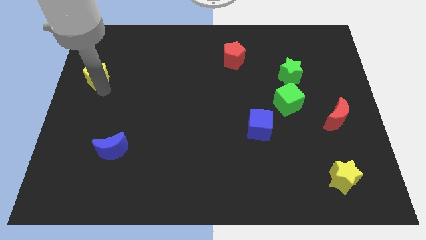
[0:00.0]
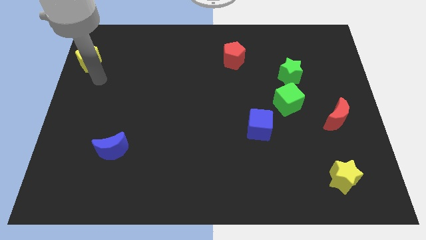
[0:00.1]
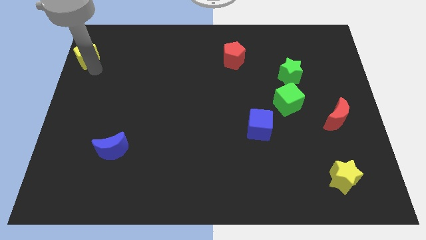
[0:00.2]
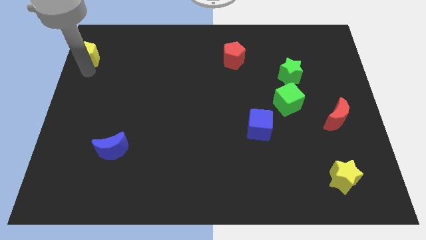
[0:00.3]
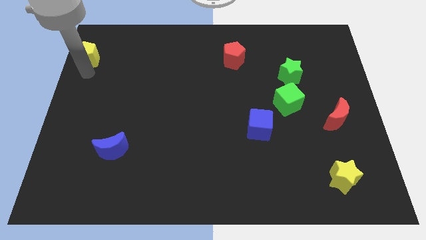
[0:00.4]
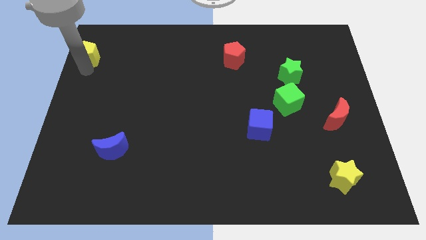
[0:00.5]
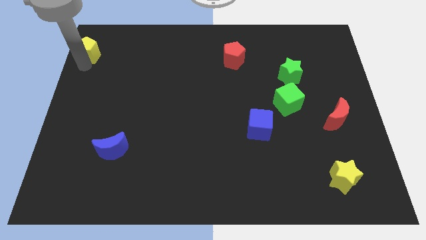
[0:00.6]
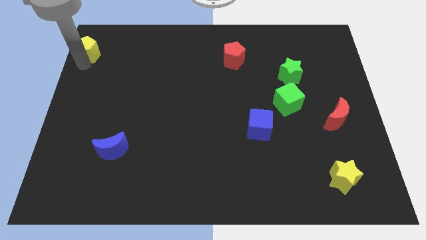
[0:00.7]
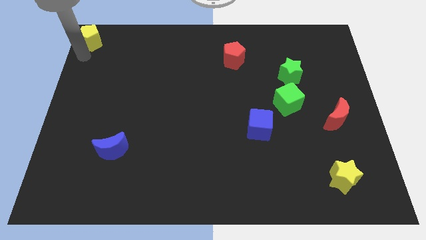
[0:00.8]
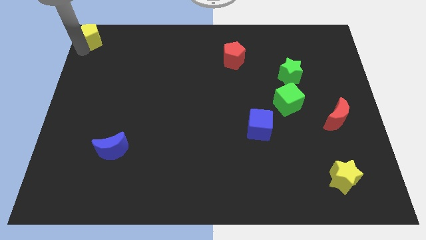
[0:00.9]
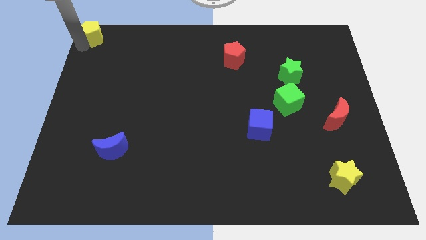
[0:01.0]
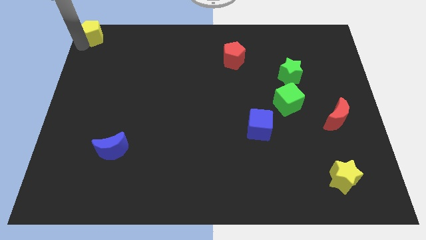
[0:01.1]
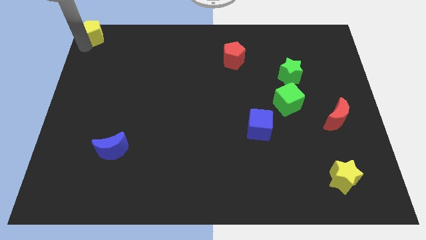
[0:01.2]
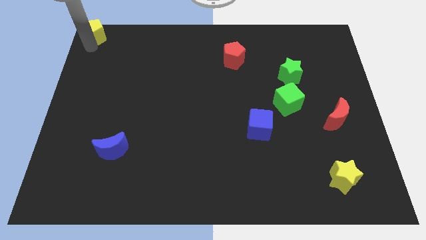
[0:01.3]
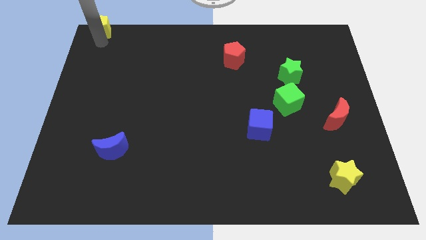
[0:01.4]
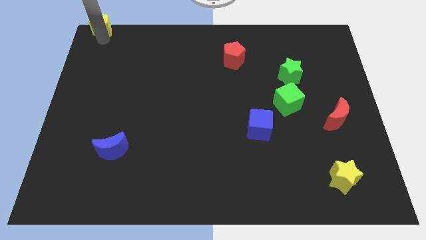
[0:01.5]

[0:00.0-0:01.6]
place the yellow star at top left corner of the board

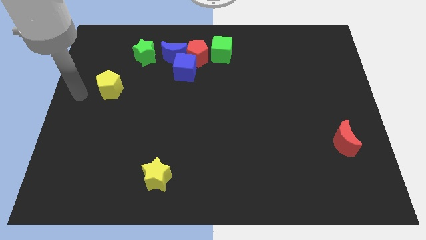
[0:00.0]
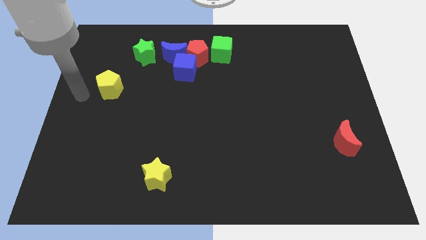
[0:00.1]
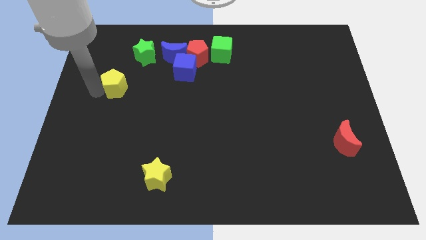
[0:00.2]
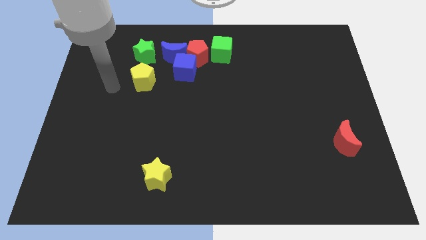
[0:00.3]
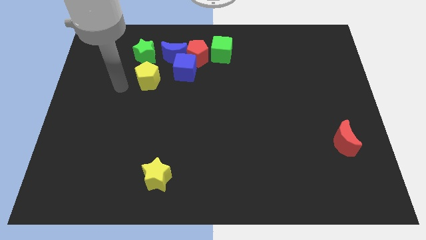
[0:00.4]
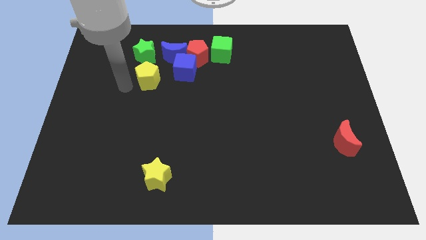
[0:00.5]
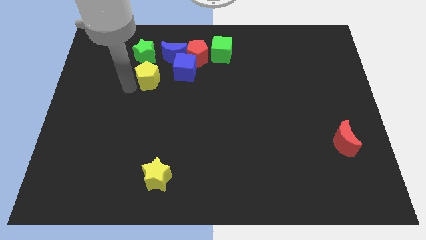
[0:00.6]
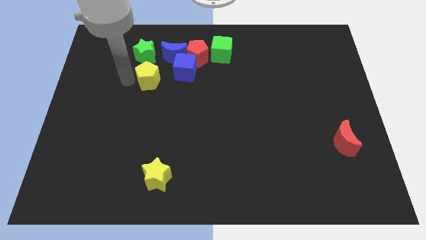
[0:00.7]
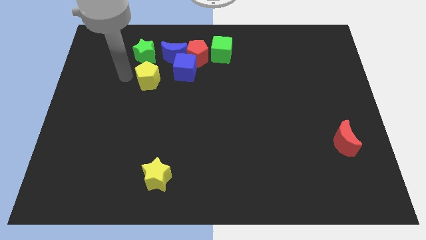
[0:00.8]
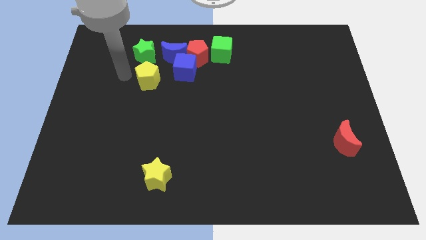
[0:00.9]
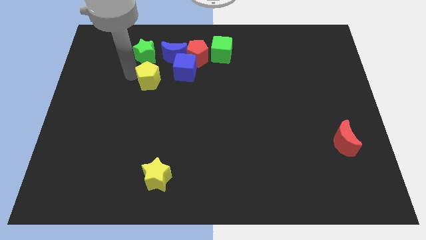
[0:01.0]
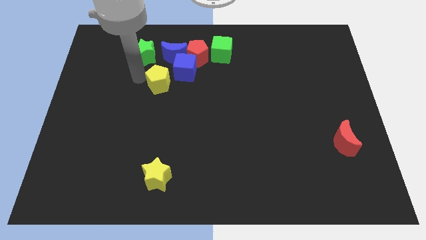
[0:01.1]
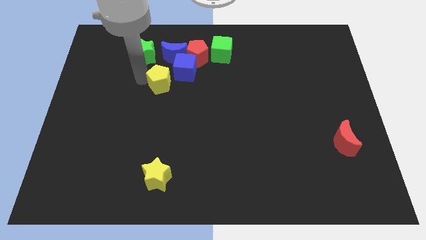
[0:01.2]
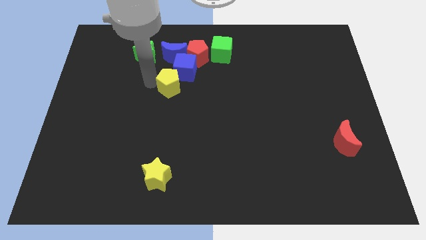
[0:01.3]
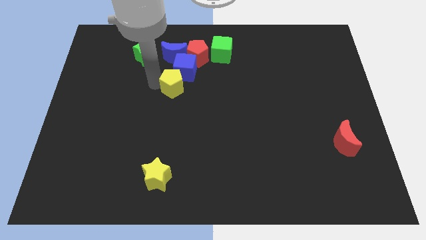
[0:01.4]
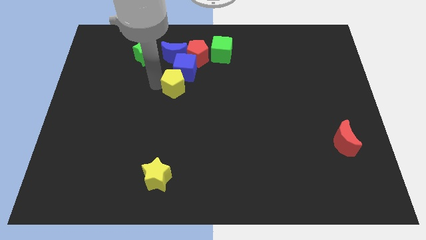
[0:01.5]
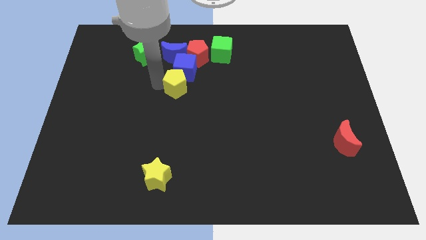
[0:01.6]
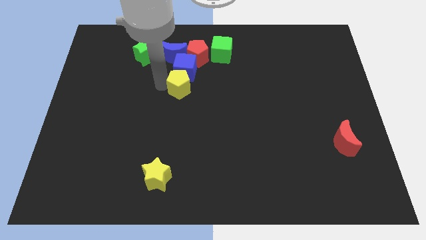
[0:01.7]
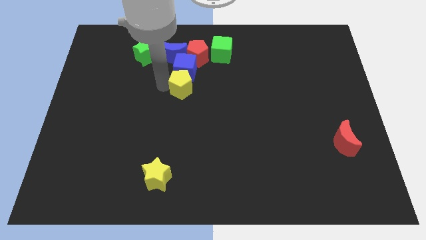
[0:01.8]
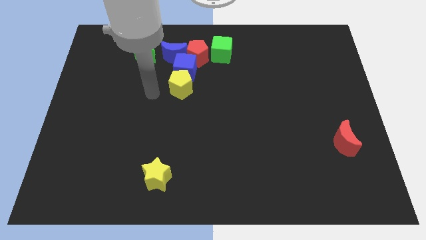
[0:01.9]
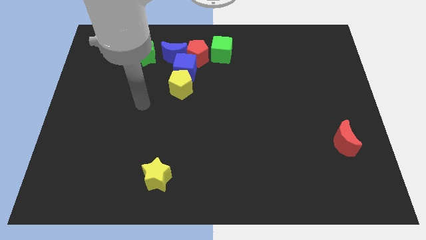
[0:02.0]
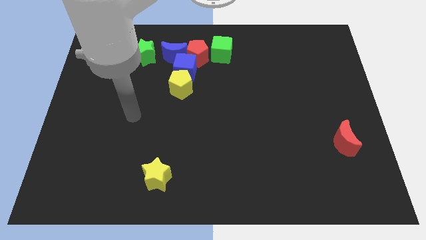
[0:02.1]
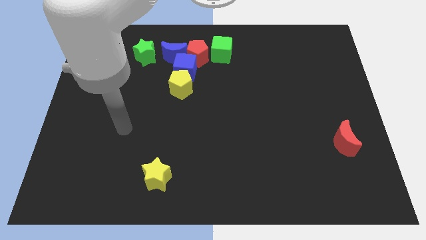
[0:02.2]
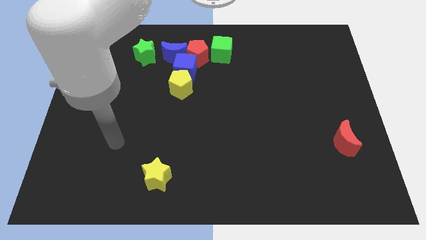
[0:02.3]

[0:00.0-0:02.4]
move the yellow star below the blue cube

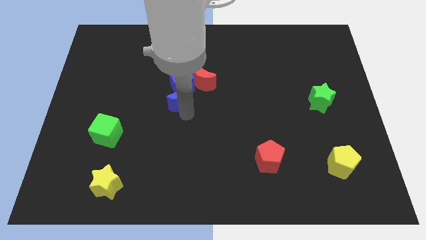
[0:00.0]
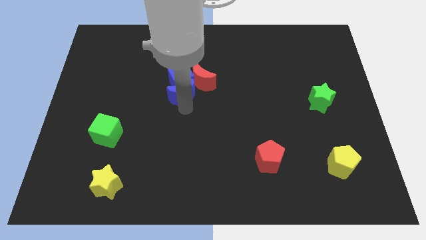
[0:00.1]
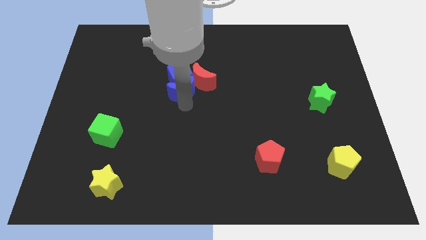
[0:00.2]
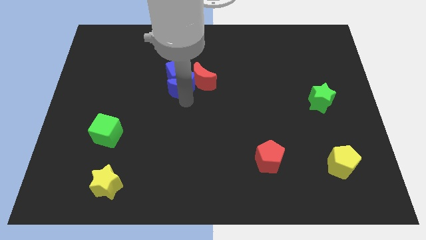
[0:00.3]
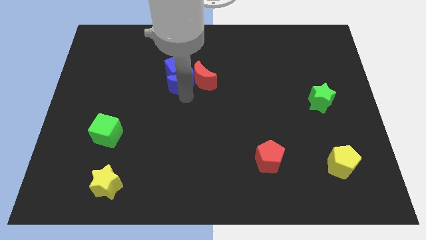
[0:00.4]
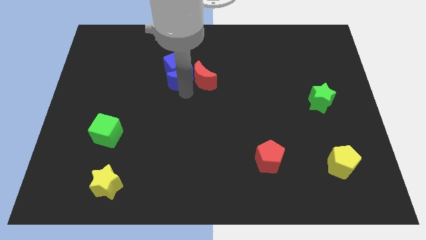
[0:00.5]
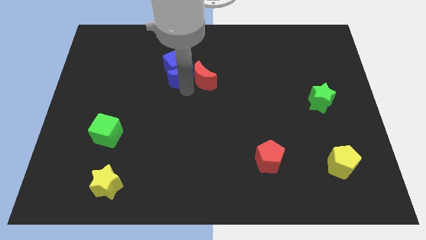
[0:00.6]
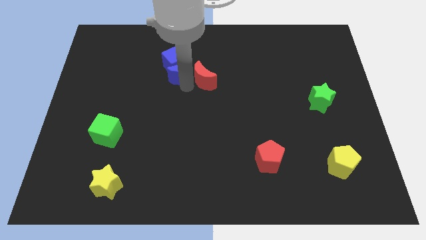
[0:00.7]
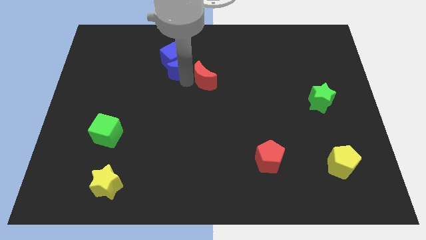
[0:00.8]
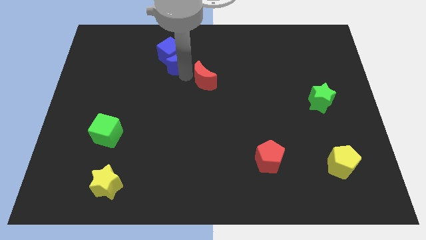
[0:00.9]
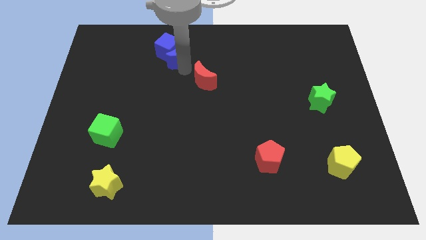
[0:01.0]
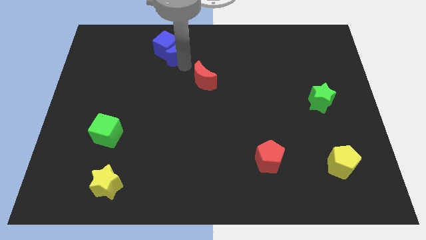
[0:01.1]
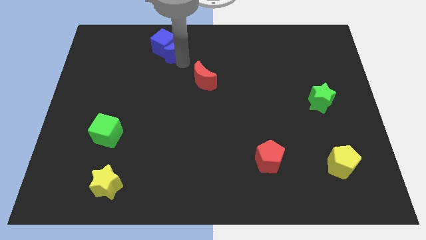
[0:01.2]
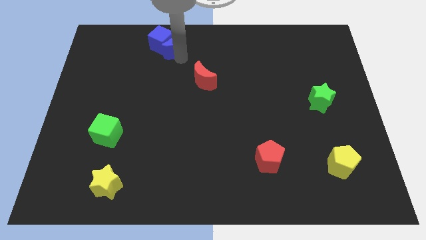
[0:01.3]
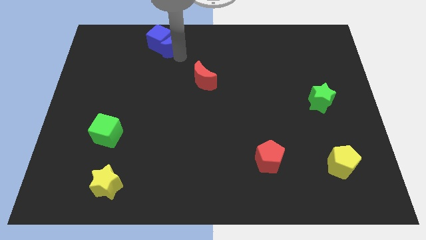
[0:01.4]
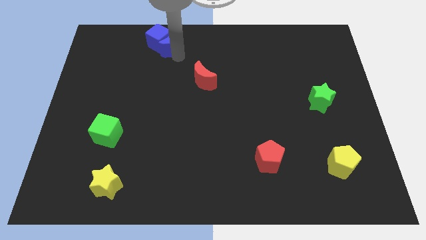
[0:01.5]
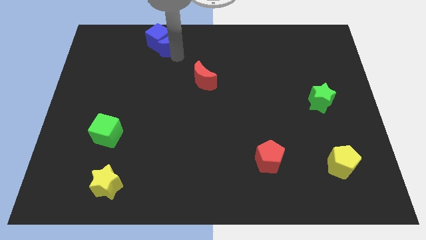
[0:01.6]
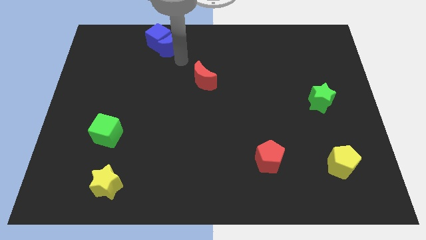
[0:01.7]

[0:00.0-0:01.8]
push the blue crescent into blue cube

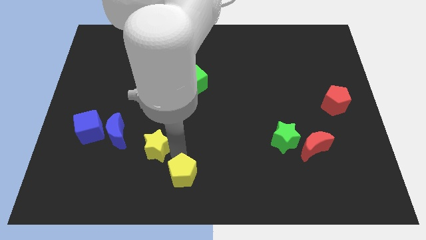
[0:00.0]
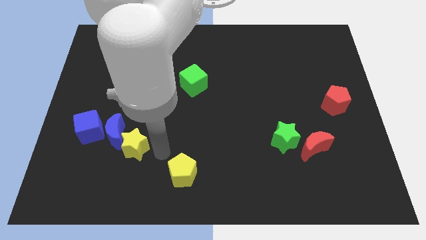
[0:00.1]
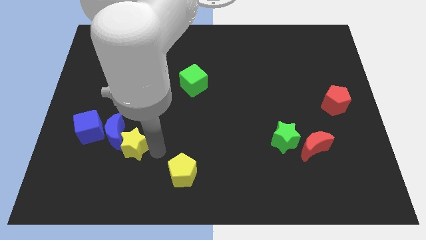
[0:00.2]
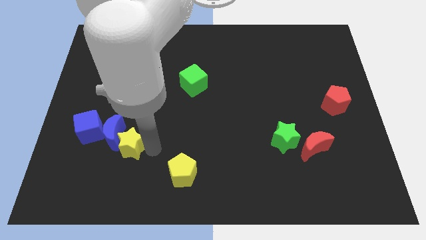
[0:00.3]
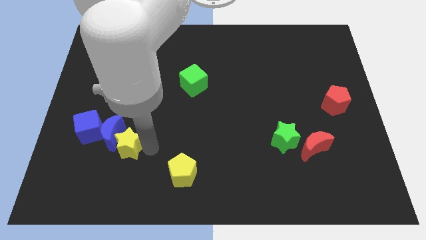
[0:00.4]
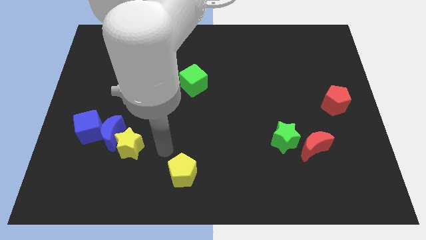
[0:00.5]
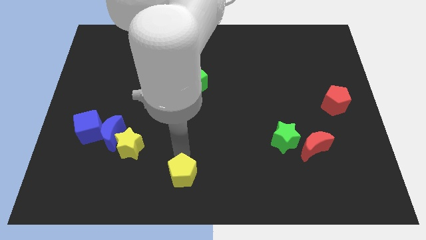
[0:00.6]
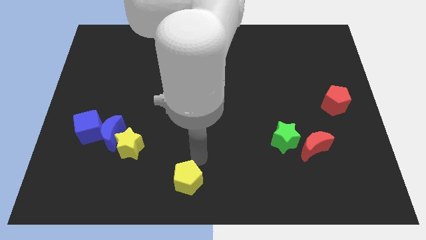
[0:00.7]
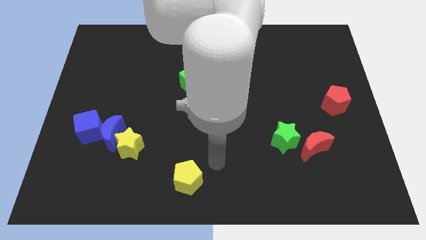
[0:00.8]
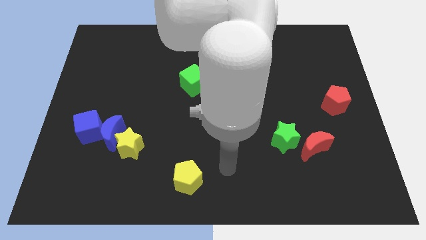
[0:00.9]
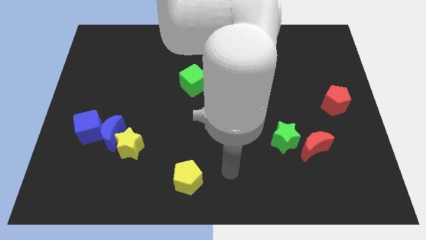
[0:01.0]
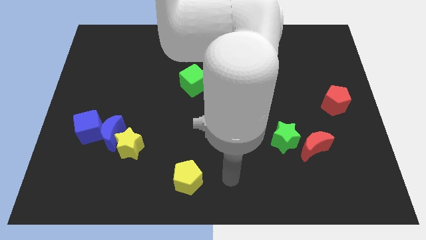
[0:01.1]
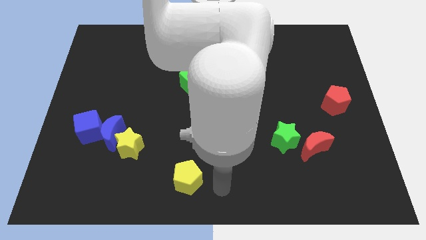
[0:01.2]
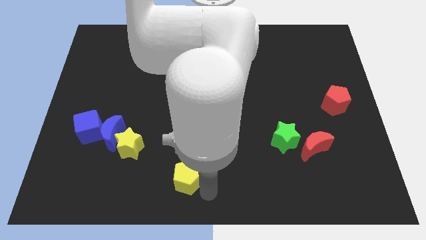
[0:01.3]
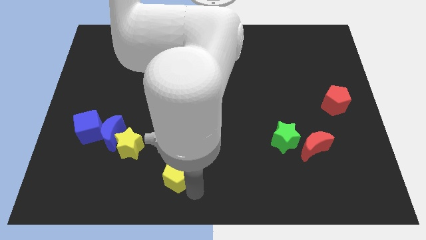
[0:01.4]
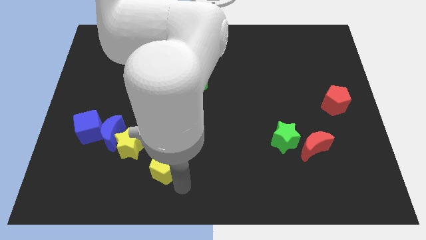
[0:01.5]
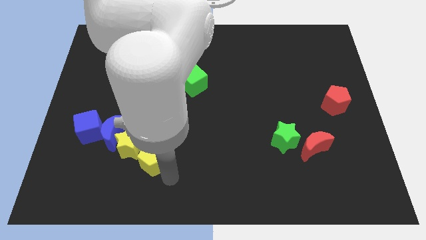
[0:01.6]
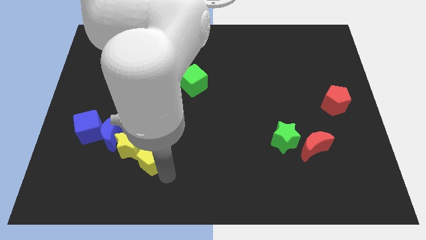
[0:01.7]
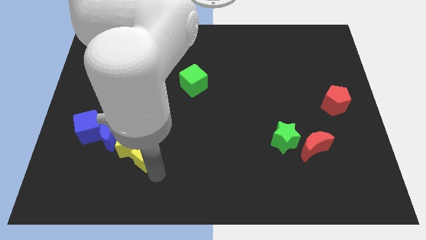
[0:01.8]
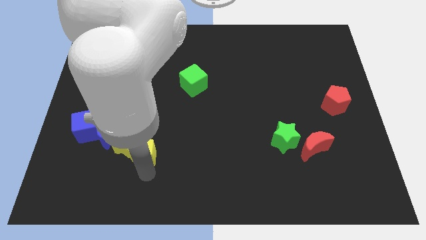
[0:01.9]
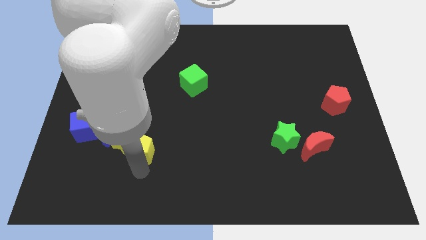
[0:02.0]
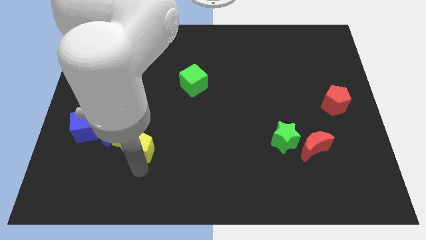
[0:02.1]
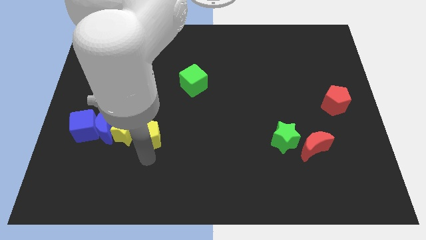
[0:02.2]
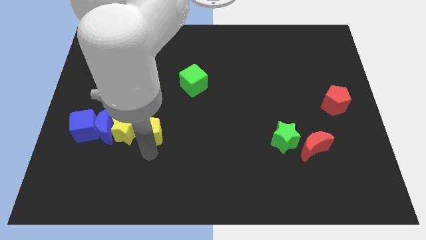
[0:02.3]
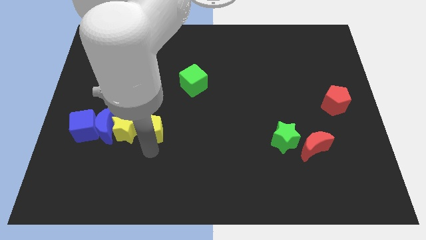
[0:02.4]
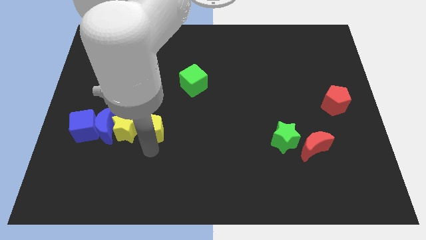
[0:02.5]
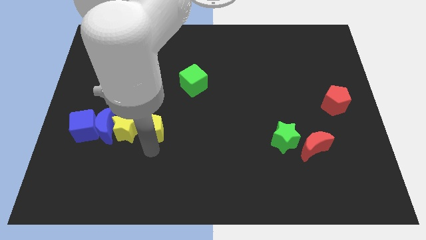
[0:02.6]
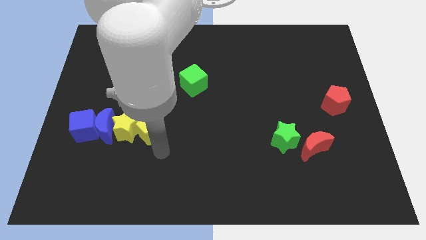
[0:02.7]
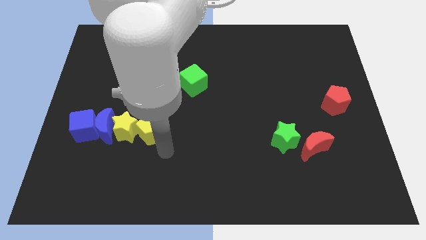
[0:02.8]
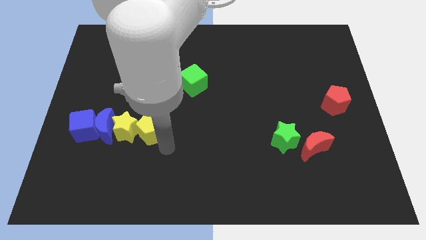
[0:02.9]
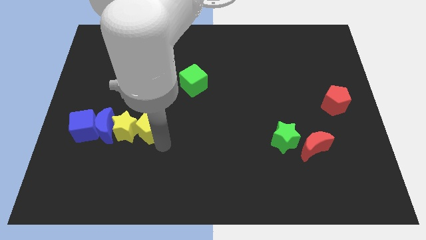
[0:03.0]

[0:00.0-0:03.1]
push the yellow pentagon into the yellow star
